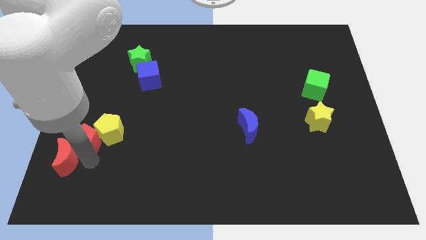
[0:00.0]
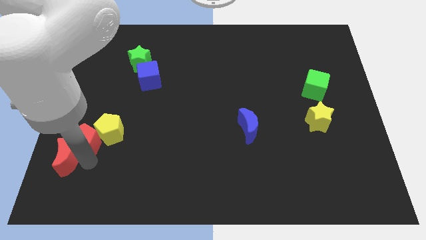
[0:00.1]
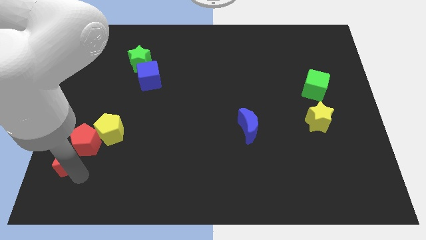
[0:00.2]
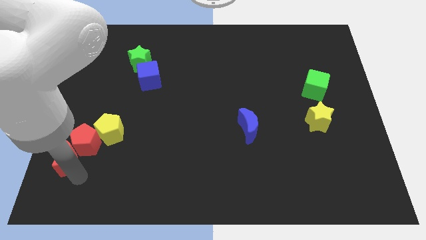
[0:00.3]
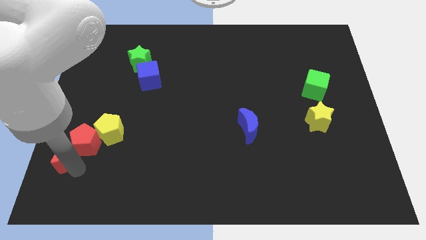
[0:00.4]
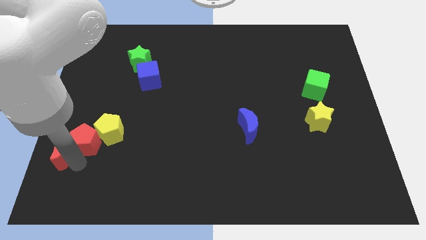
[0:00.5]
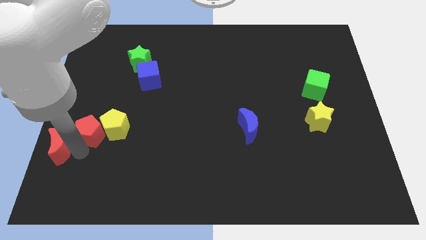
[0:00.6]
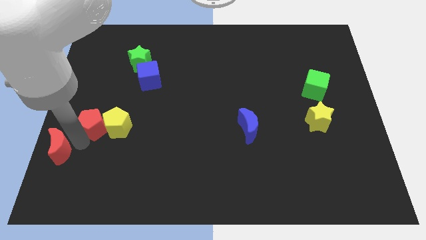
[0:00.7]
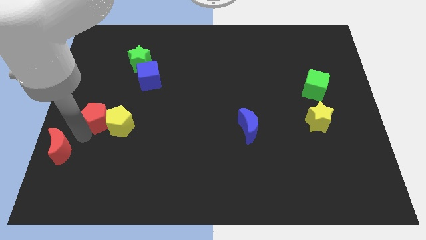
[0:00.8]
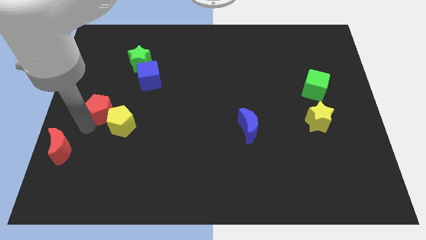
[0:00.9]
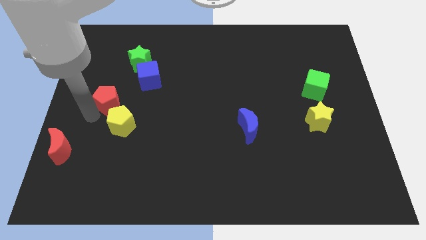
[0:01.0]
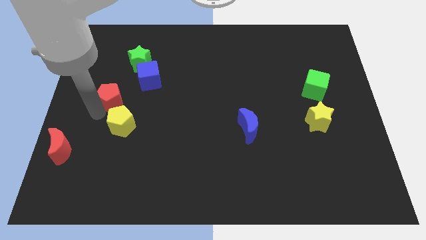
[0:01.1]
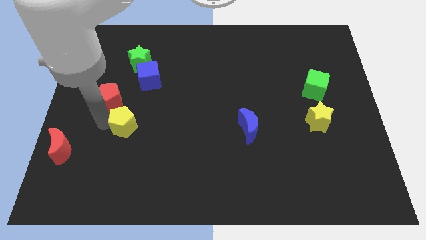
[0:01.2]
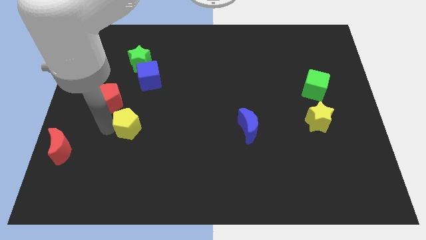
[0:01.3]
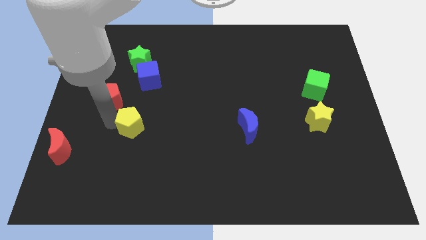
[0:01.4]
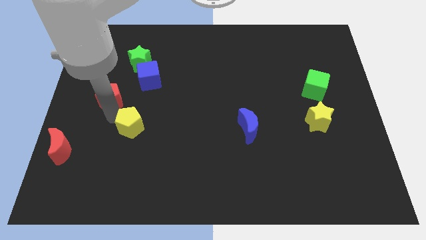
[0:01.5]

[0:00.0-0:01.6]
separate the red pentagon from yellow pentagon and red moon

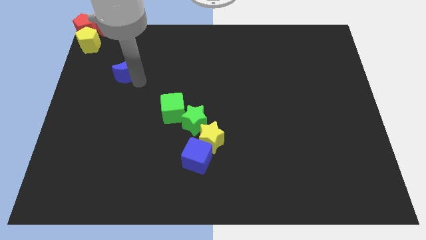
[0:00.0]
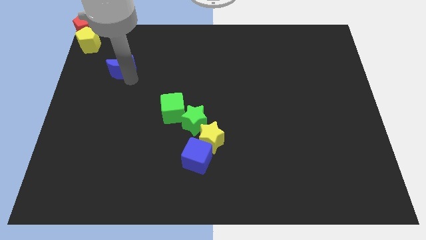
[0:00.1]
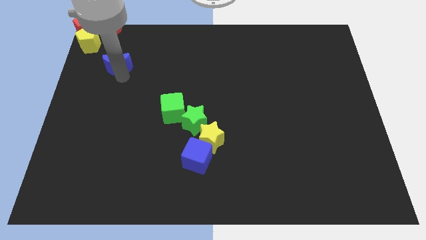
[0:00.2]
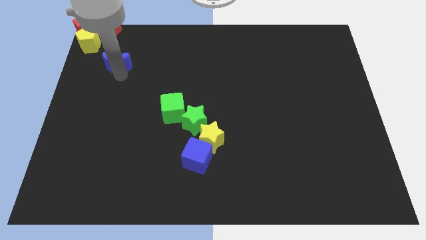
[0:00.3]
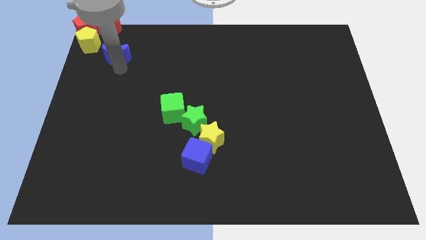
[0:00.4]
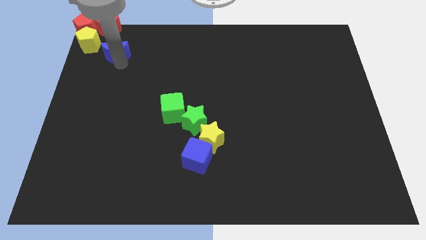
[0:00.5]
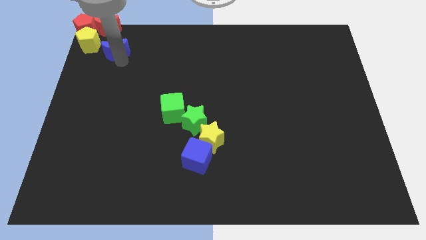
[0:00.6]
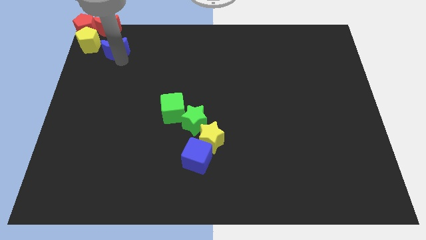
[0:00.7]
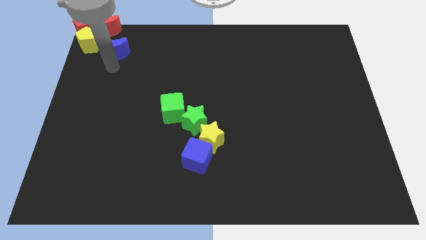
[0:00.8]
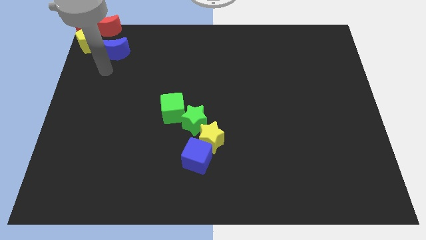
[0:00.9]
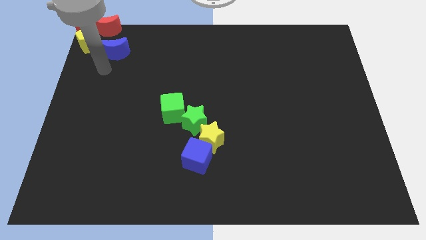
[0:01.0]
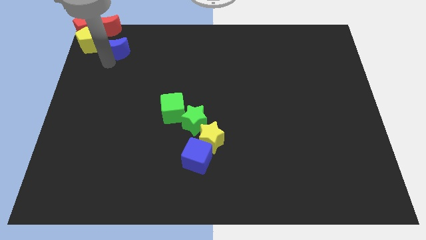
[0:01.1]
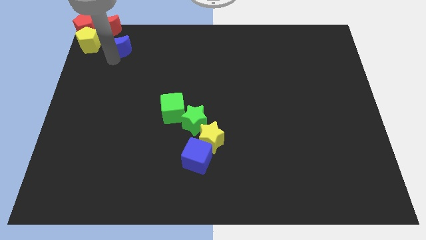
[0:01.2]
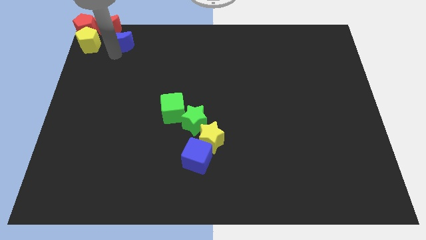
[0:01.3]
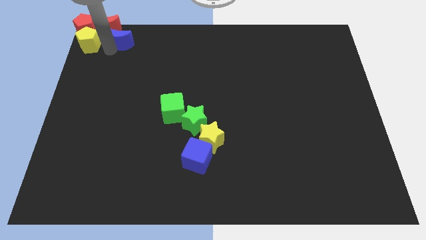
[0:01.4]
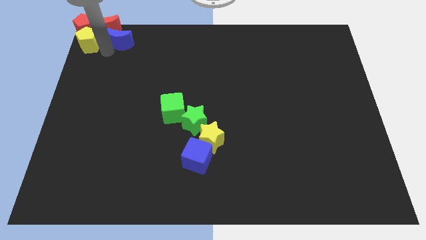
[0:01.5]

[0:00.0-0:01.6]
place the blue moon right to the yellow pentgaon

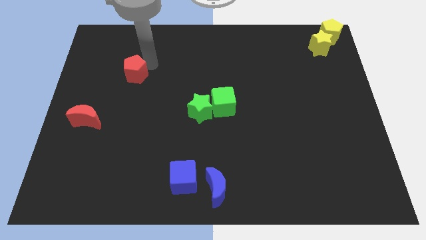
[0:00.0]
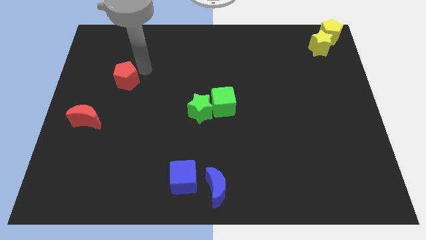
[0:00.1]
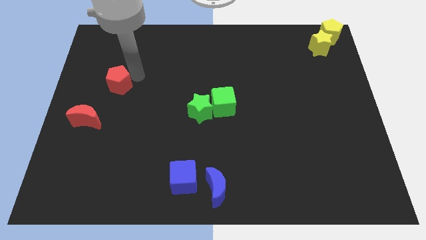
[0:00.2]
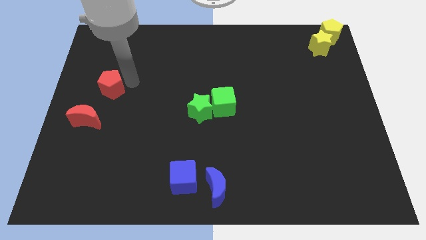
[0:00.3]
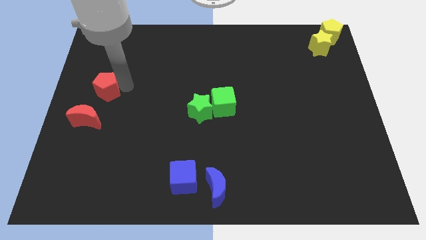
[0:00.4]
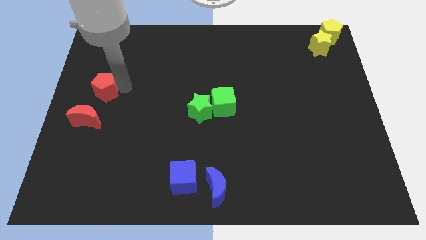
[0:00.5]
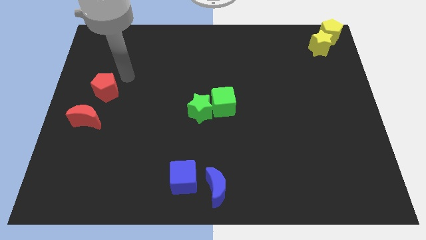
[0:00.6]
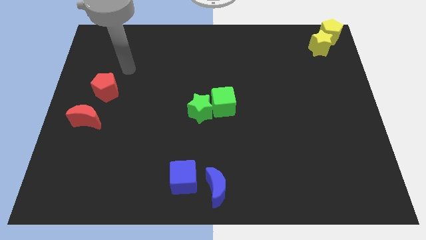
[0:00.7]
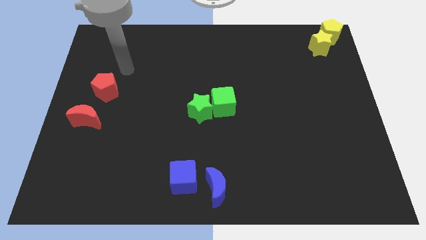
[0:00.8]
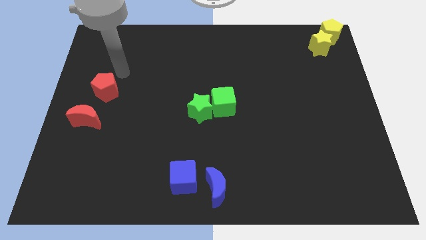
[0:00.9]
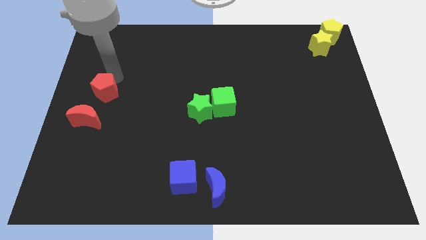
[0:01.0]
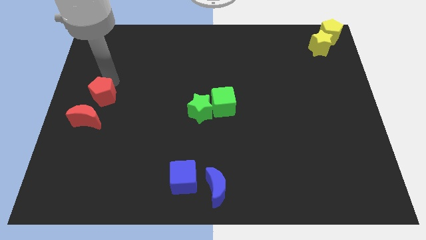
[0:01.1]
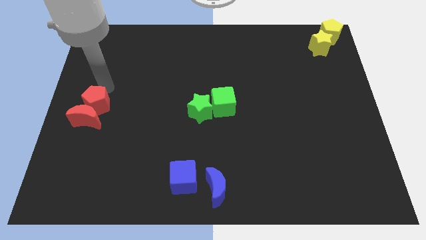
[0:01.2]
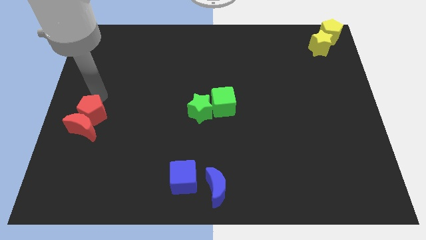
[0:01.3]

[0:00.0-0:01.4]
move the red pentagon to the top of the red crescent

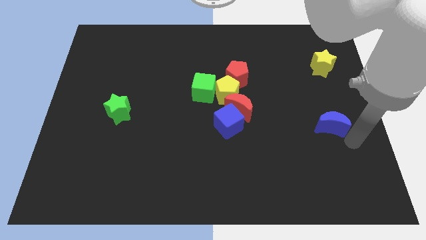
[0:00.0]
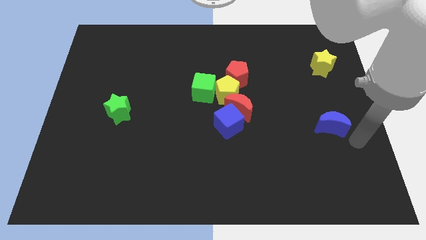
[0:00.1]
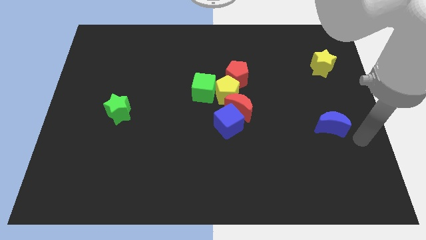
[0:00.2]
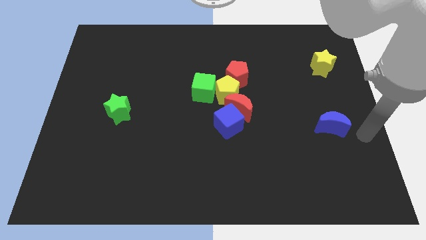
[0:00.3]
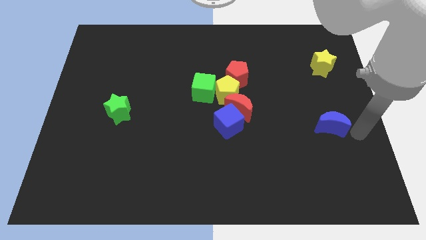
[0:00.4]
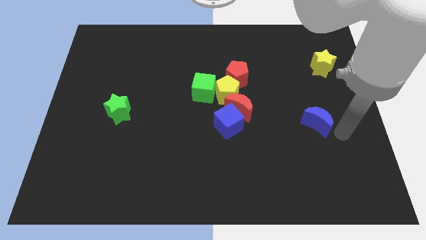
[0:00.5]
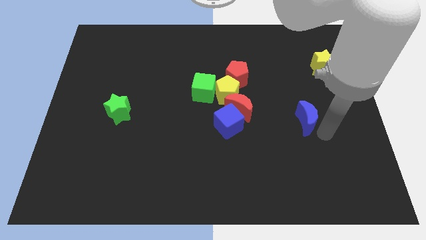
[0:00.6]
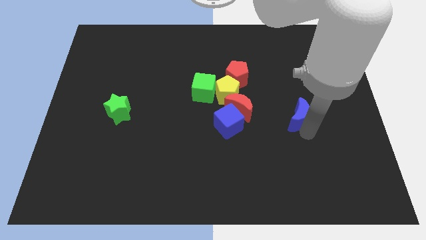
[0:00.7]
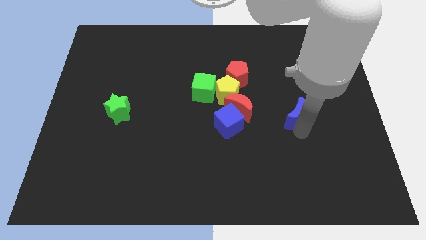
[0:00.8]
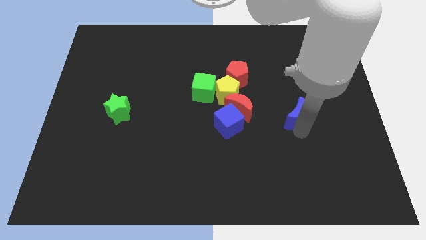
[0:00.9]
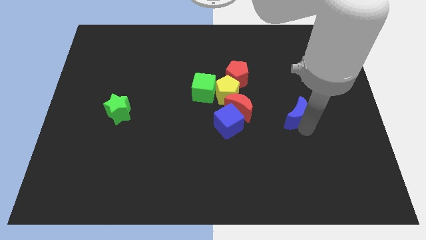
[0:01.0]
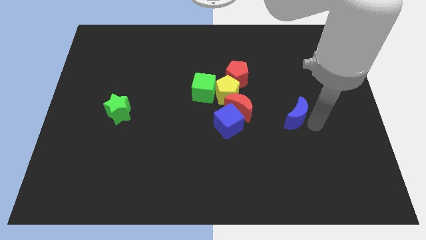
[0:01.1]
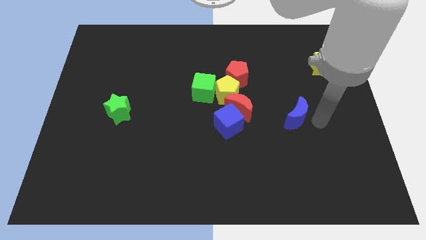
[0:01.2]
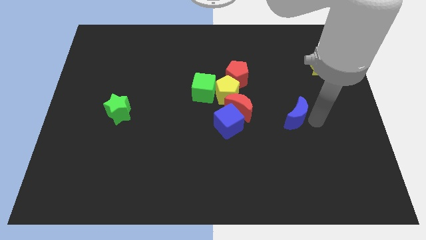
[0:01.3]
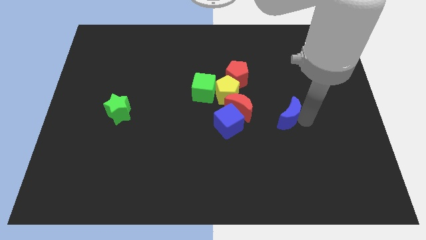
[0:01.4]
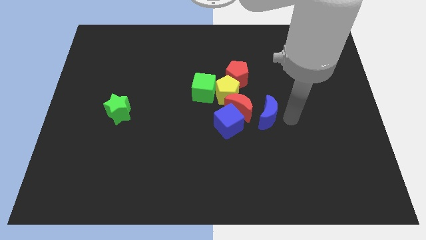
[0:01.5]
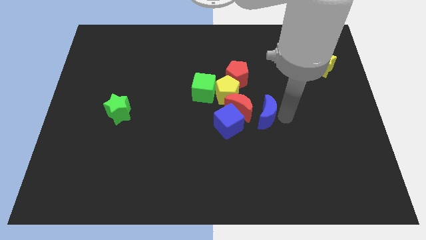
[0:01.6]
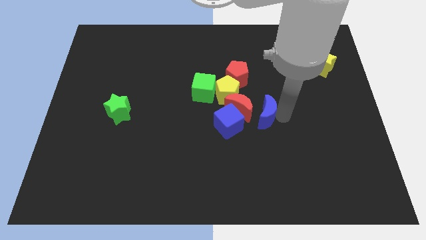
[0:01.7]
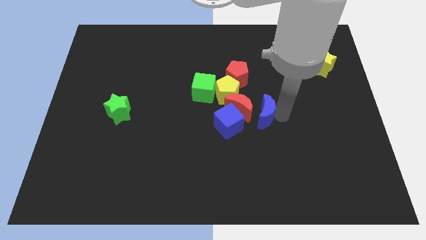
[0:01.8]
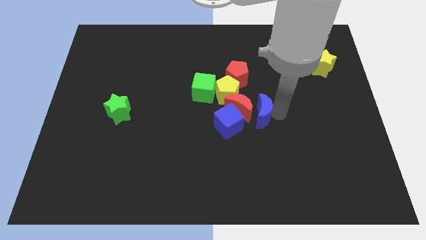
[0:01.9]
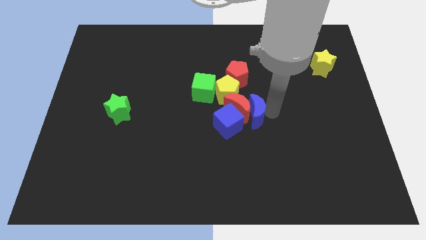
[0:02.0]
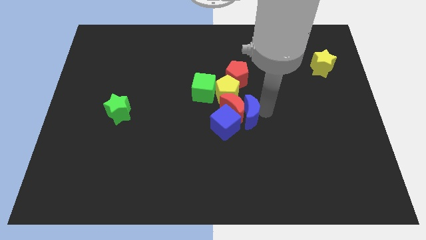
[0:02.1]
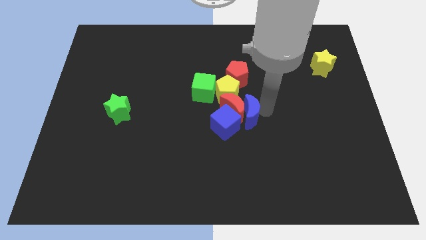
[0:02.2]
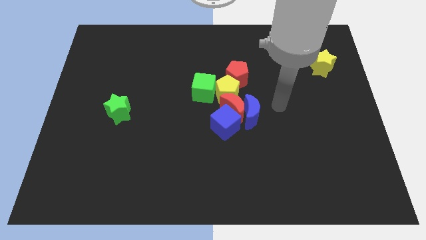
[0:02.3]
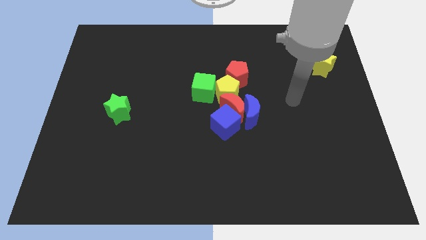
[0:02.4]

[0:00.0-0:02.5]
place the blue moon at the right of the red moon

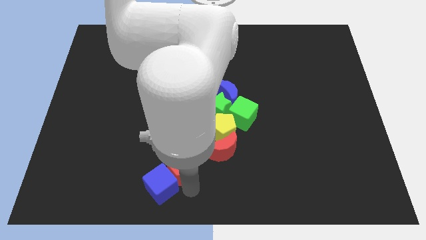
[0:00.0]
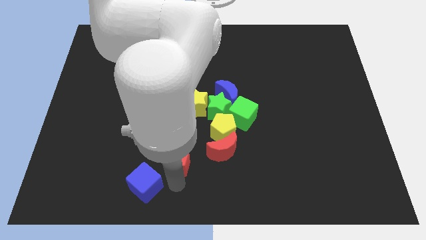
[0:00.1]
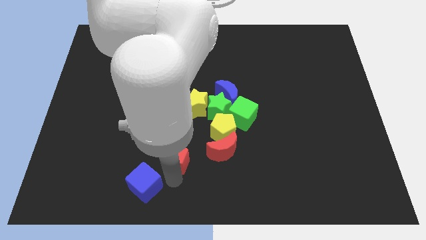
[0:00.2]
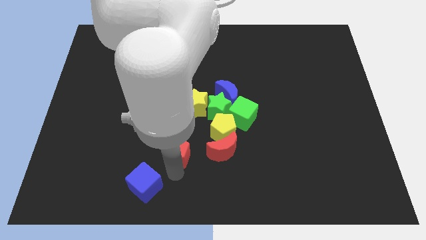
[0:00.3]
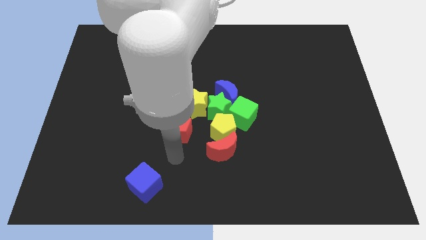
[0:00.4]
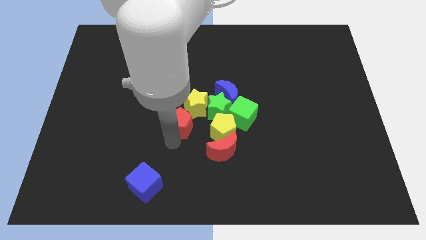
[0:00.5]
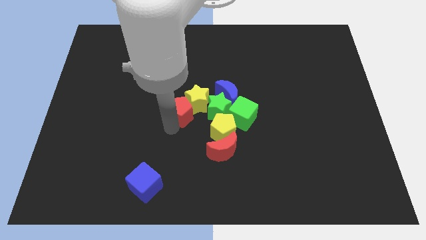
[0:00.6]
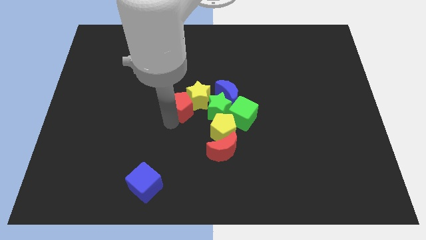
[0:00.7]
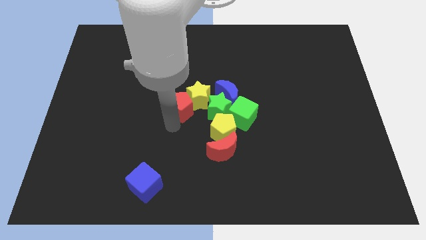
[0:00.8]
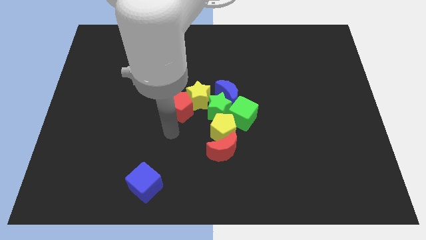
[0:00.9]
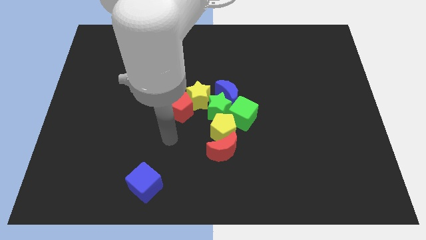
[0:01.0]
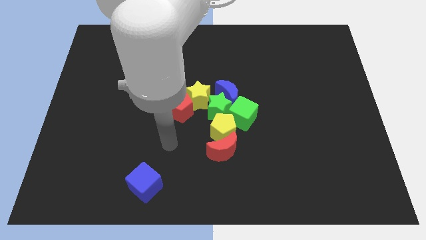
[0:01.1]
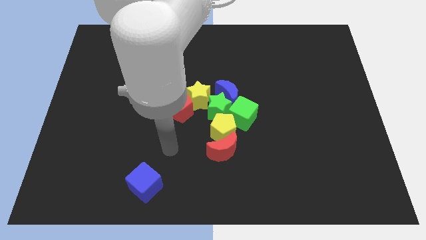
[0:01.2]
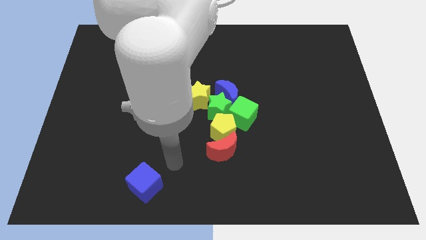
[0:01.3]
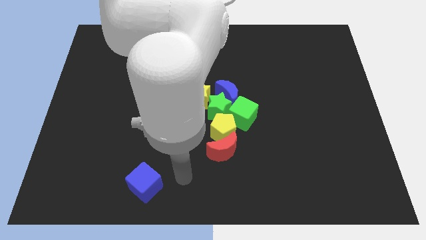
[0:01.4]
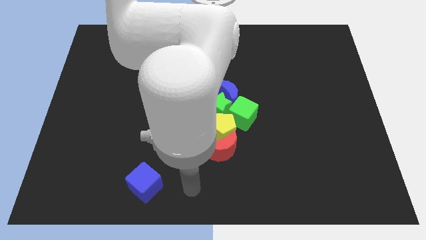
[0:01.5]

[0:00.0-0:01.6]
move the red pentagon into the yellow star

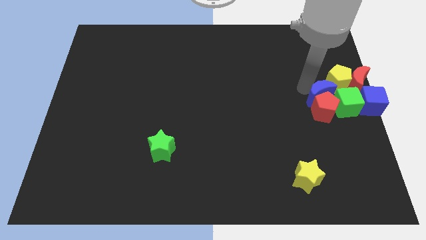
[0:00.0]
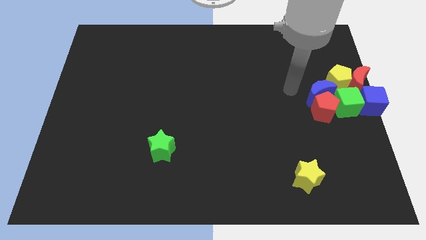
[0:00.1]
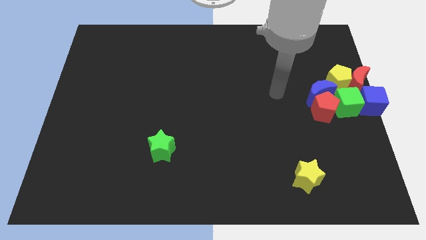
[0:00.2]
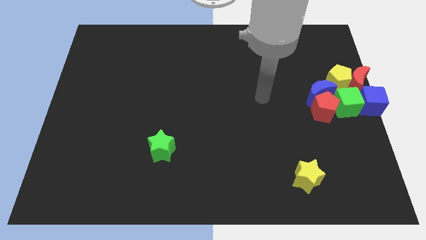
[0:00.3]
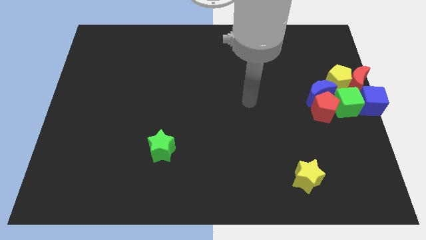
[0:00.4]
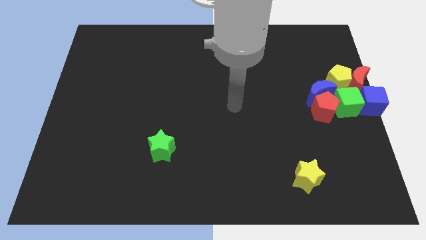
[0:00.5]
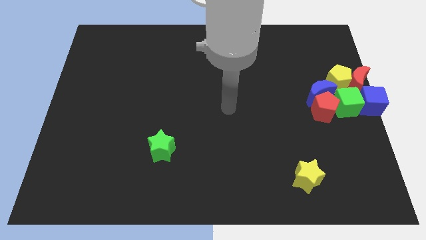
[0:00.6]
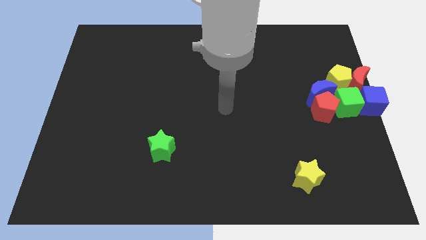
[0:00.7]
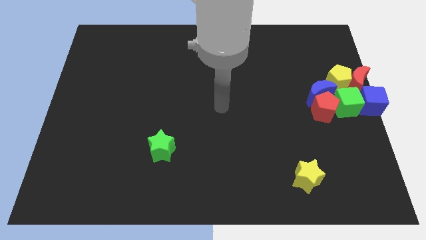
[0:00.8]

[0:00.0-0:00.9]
move your arm away from blue moon
